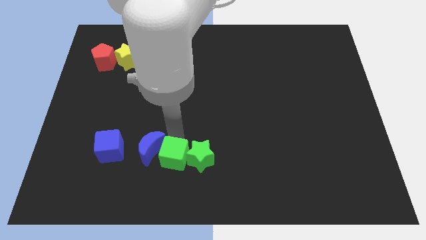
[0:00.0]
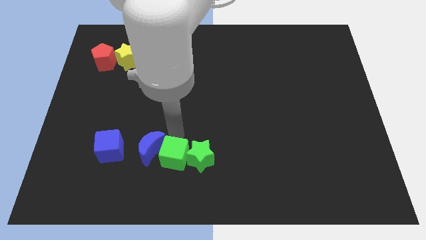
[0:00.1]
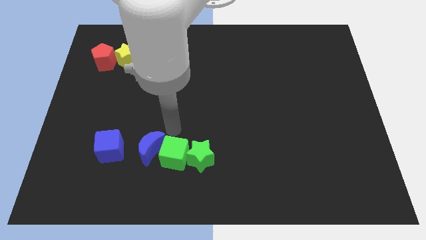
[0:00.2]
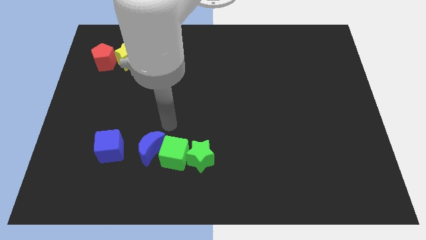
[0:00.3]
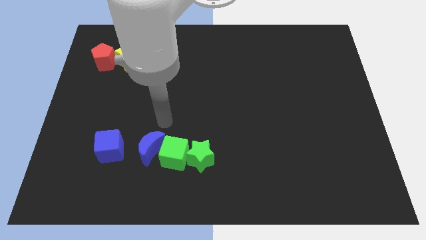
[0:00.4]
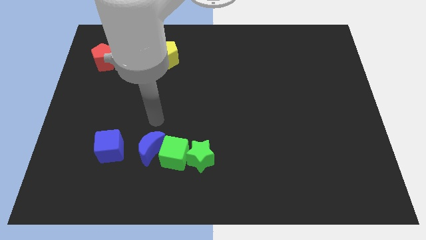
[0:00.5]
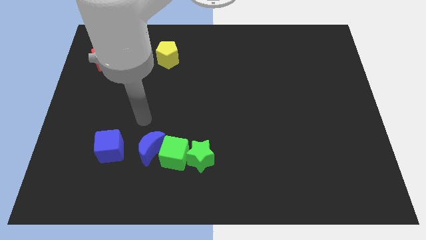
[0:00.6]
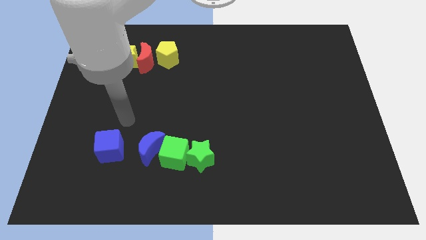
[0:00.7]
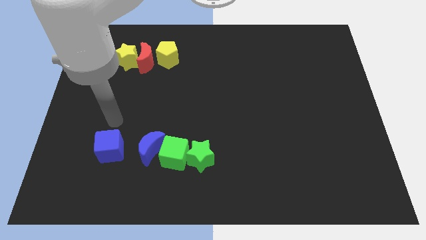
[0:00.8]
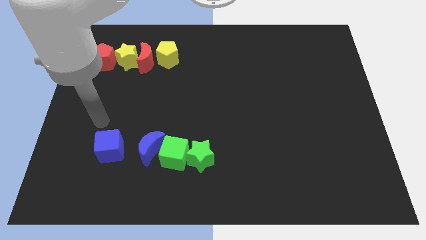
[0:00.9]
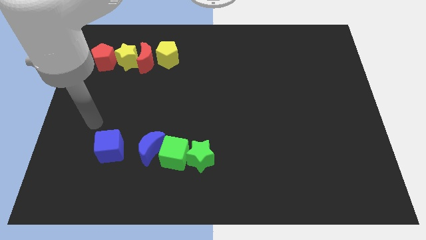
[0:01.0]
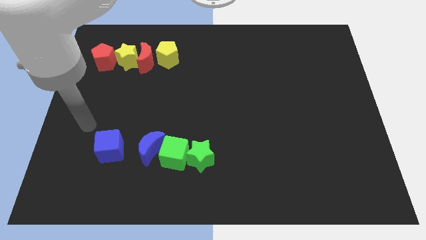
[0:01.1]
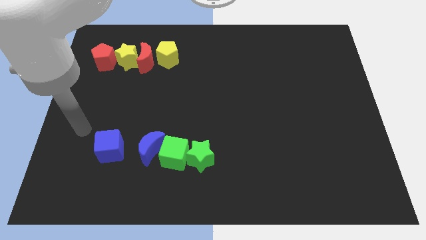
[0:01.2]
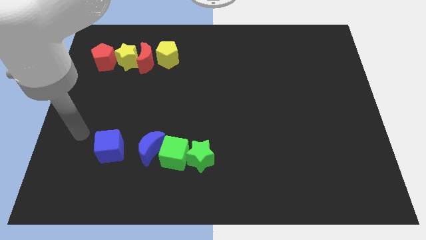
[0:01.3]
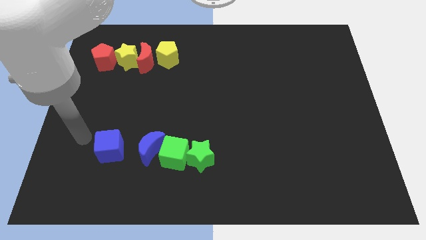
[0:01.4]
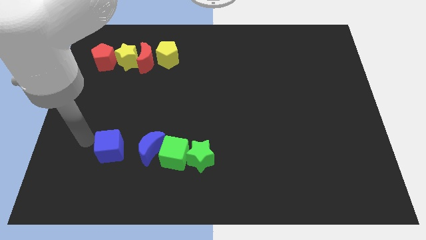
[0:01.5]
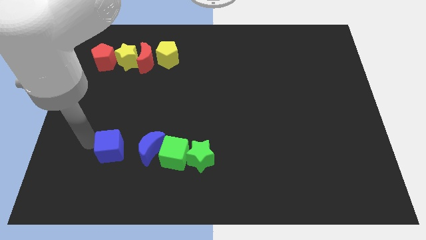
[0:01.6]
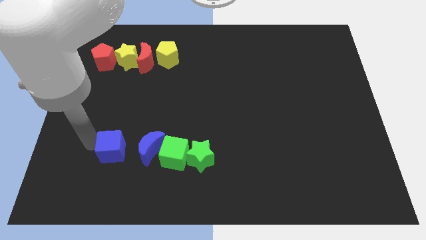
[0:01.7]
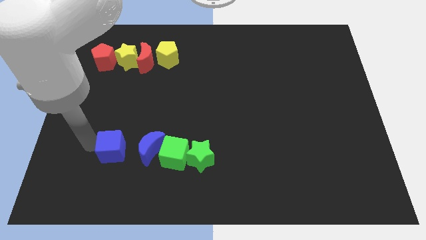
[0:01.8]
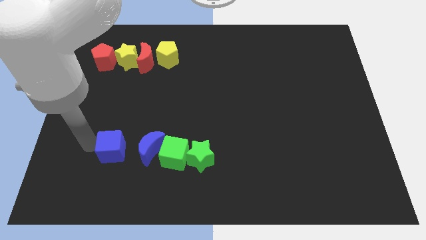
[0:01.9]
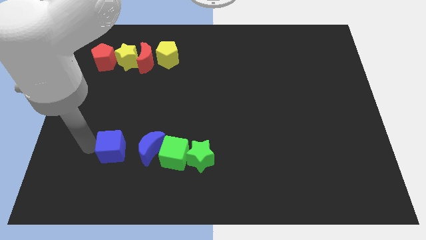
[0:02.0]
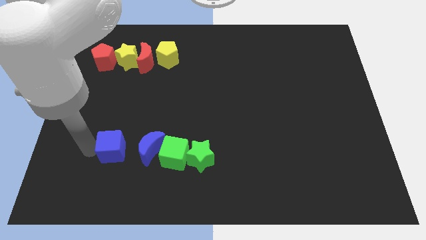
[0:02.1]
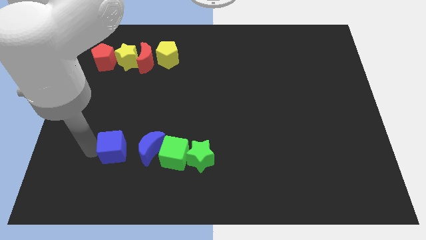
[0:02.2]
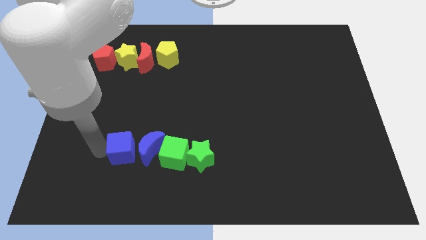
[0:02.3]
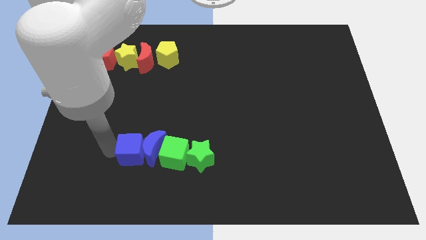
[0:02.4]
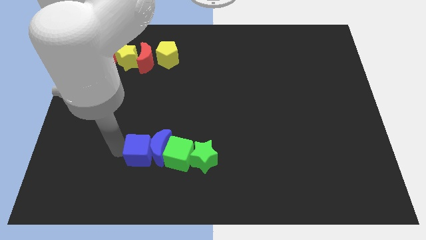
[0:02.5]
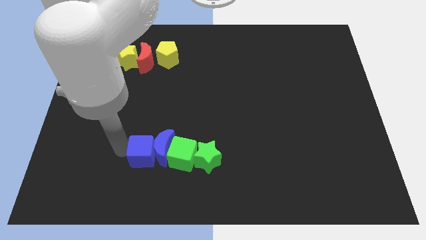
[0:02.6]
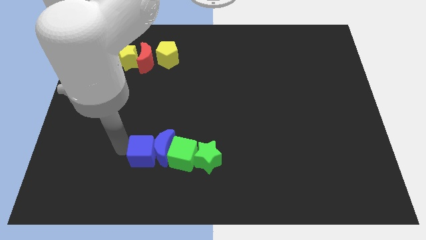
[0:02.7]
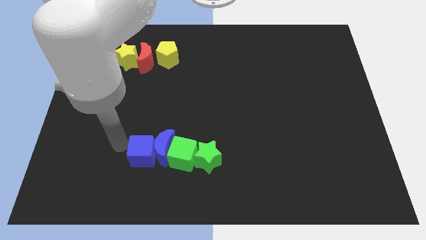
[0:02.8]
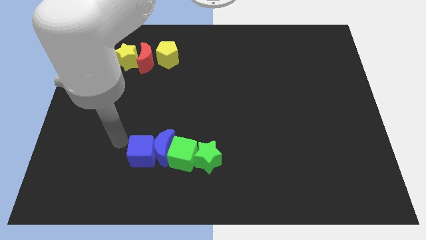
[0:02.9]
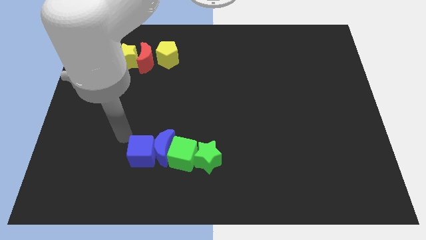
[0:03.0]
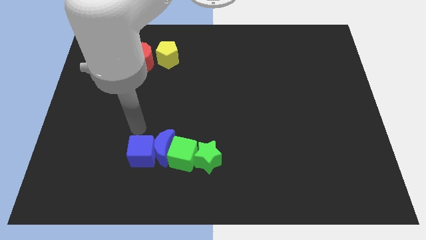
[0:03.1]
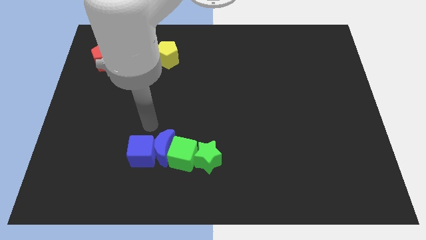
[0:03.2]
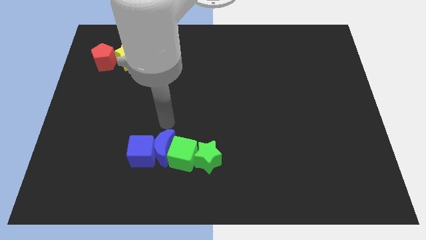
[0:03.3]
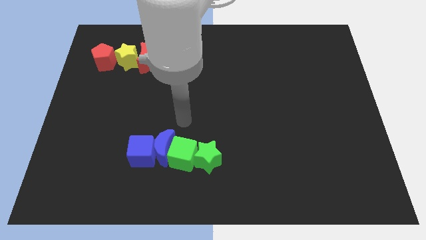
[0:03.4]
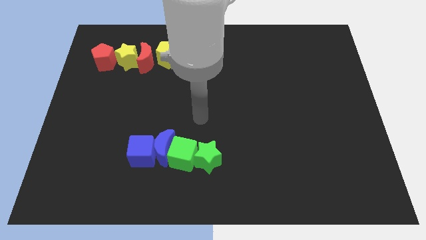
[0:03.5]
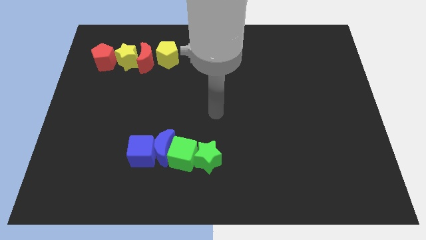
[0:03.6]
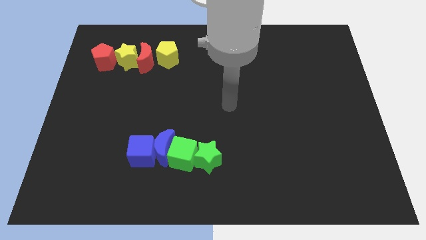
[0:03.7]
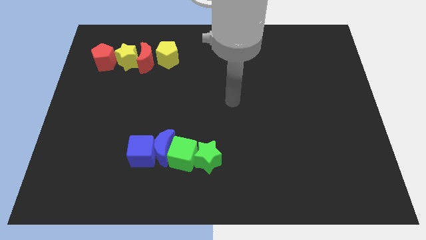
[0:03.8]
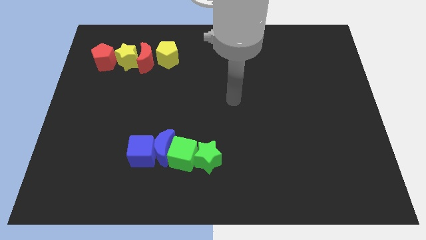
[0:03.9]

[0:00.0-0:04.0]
push the blue cube to the left of blue moon

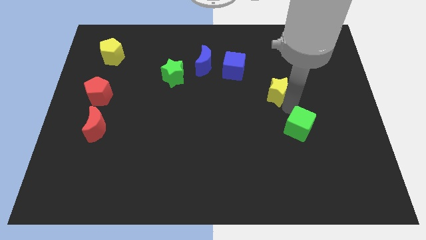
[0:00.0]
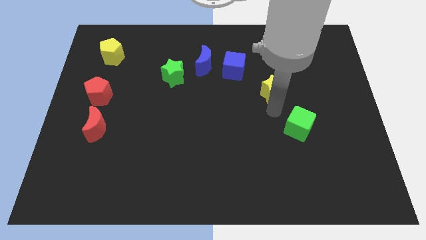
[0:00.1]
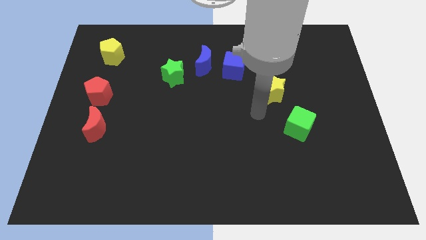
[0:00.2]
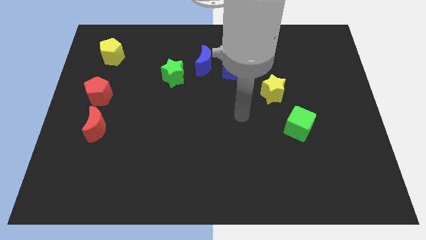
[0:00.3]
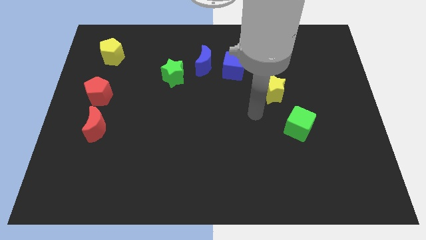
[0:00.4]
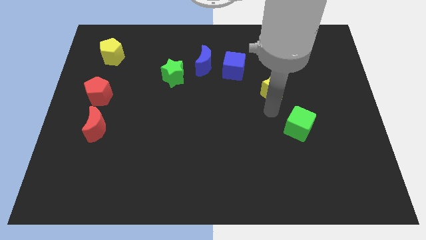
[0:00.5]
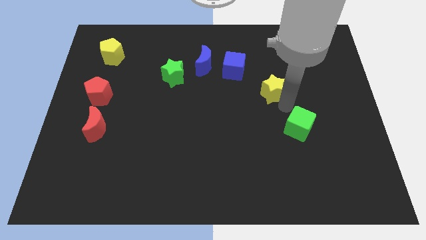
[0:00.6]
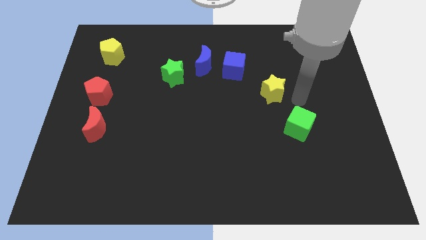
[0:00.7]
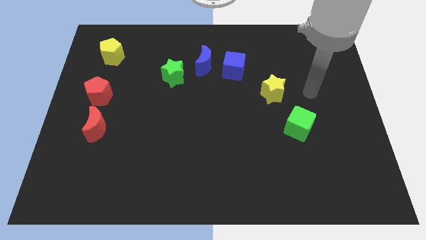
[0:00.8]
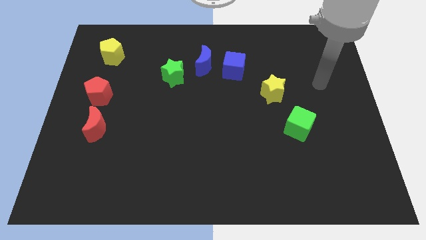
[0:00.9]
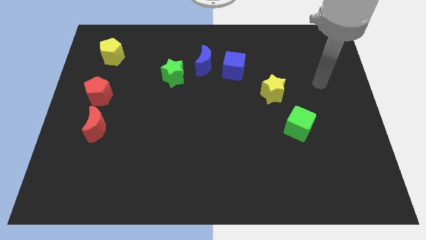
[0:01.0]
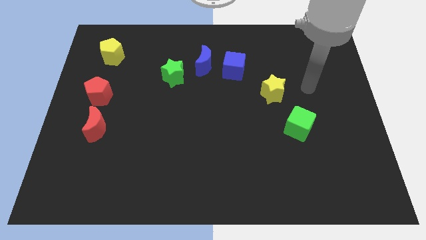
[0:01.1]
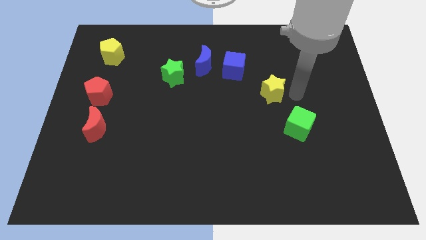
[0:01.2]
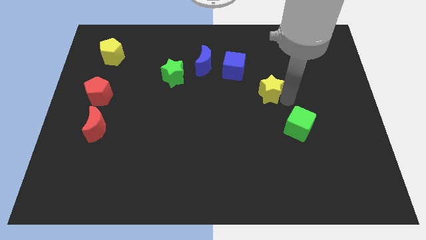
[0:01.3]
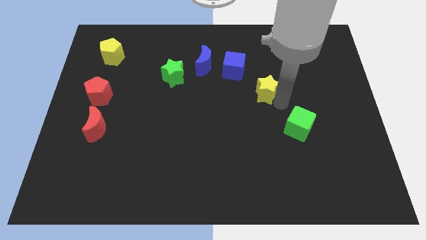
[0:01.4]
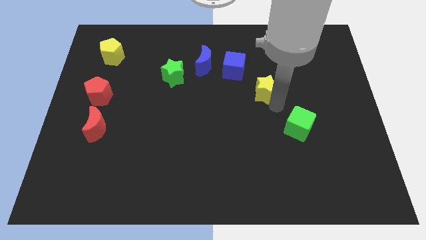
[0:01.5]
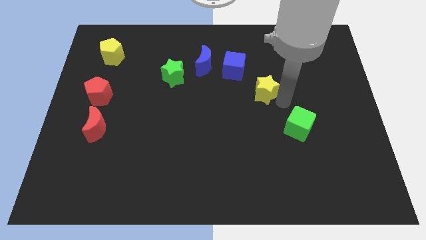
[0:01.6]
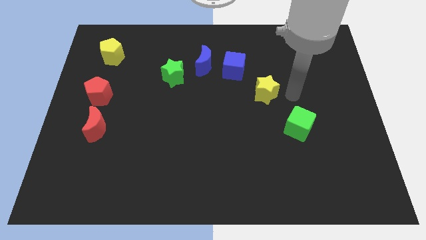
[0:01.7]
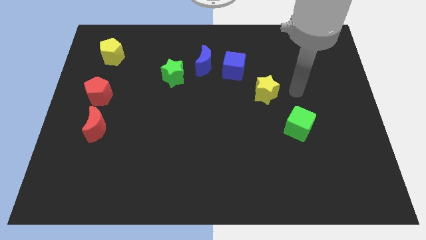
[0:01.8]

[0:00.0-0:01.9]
place the yellow star in between the green and blue cubes

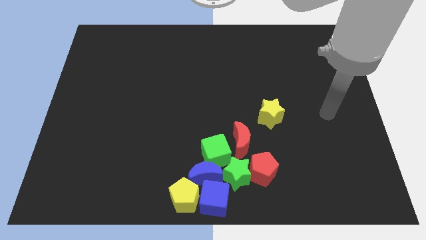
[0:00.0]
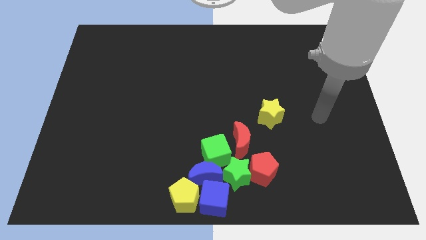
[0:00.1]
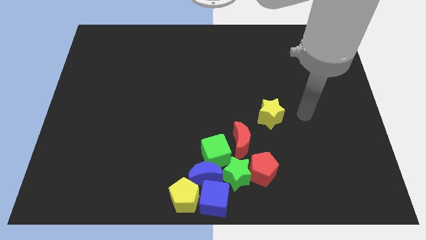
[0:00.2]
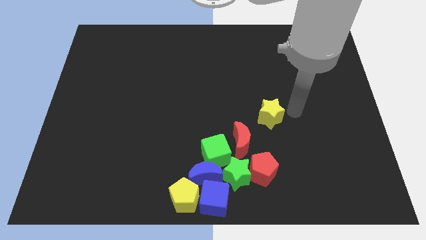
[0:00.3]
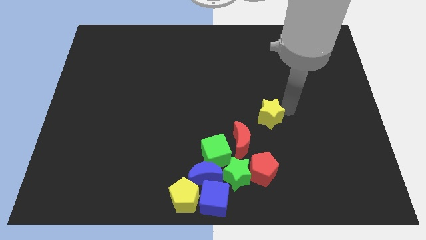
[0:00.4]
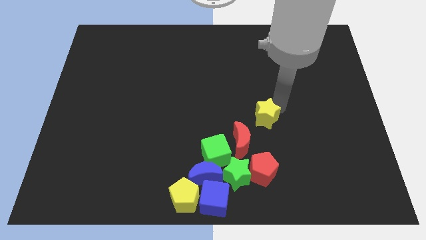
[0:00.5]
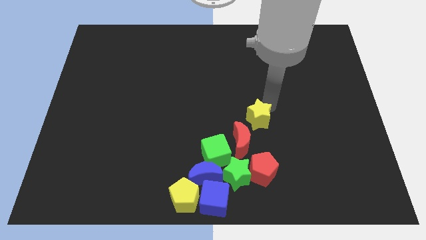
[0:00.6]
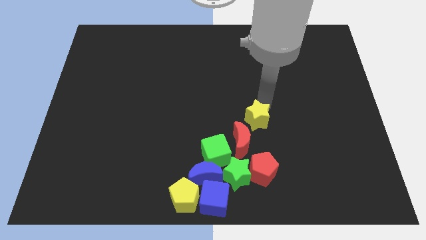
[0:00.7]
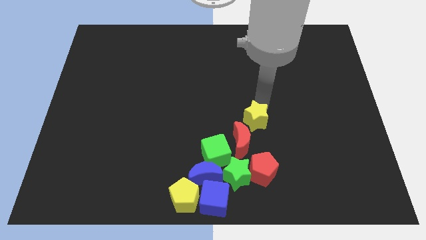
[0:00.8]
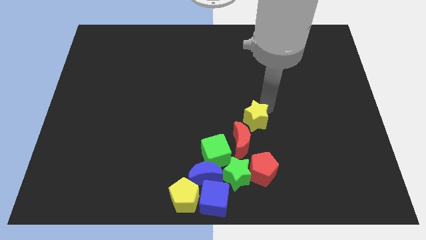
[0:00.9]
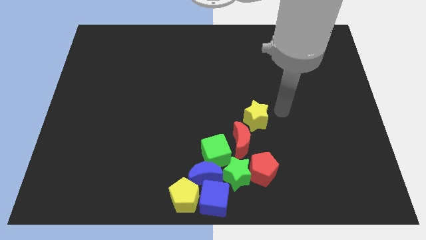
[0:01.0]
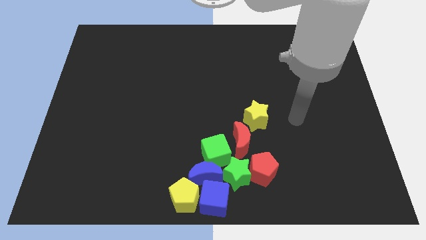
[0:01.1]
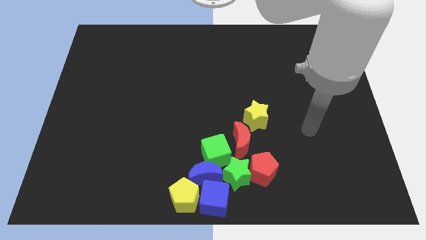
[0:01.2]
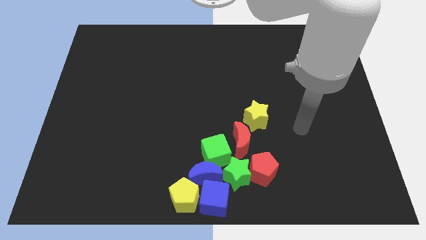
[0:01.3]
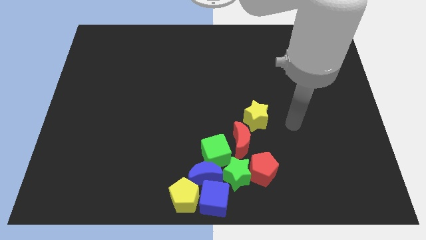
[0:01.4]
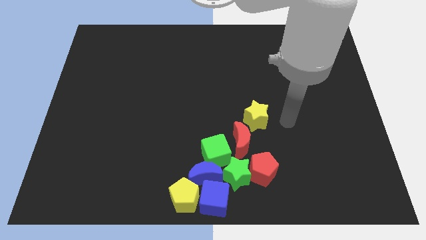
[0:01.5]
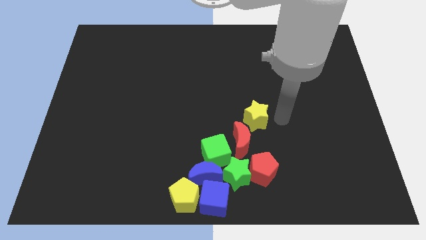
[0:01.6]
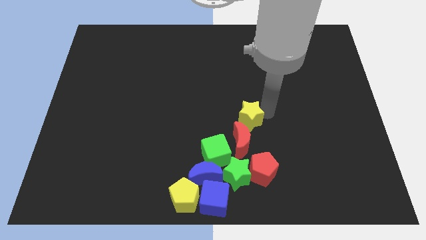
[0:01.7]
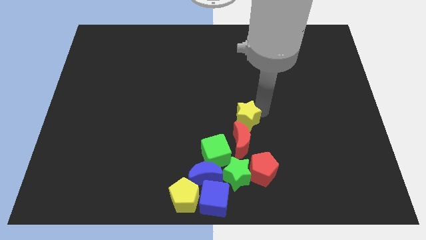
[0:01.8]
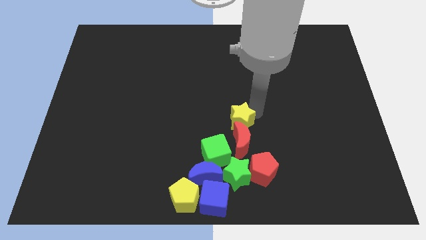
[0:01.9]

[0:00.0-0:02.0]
move the yellow star on top of the red moon

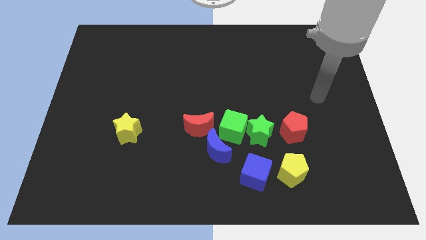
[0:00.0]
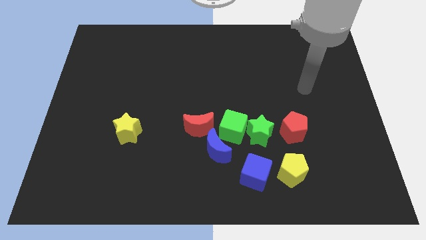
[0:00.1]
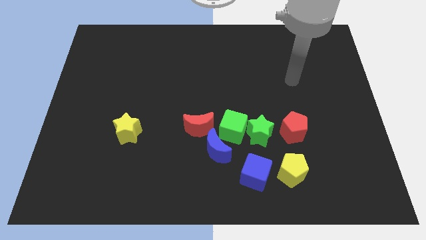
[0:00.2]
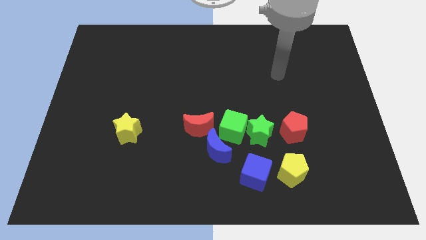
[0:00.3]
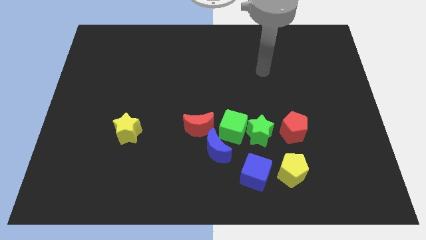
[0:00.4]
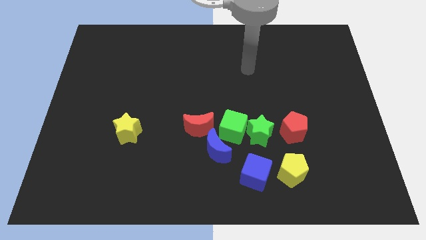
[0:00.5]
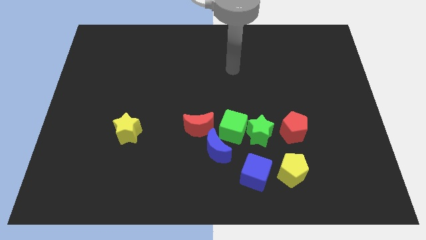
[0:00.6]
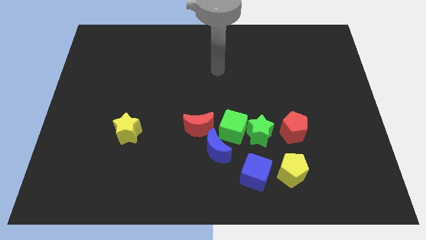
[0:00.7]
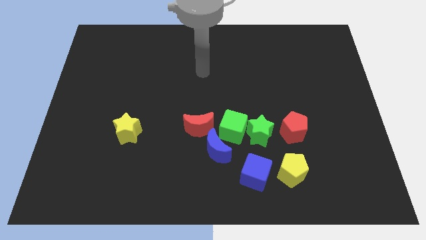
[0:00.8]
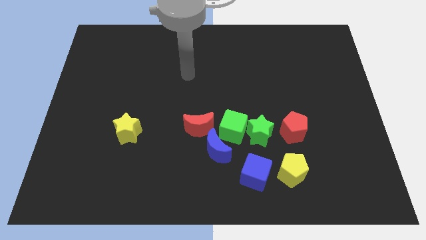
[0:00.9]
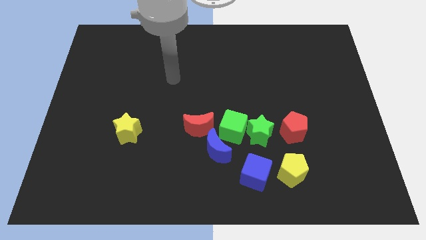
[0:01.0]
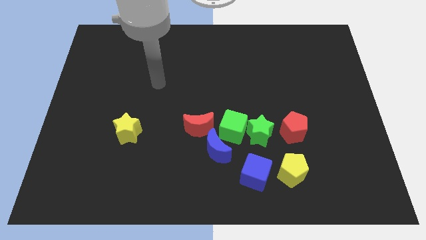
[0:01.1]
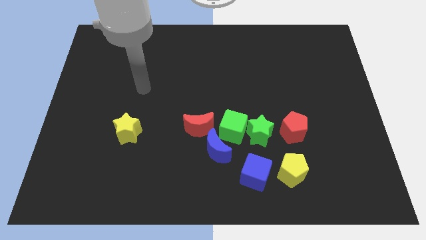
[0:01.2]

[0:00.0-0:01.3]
move your arm towards the left side of the board
